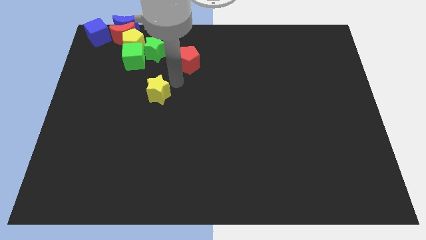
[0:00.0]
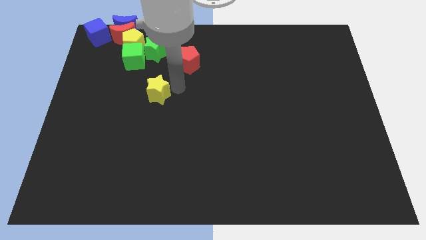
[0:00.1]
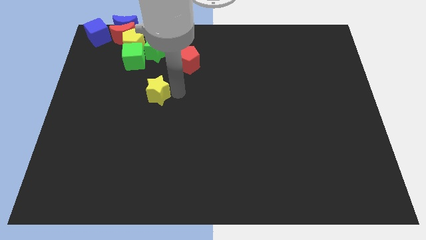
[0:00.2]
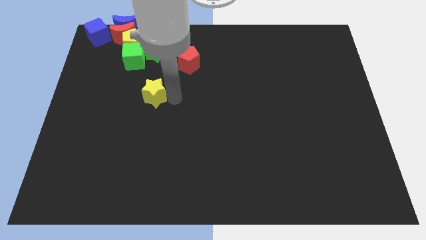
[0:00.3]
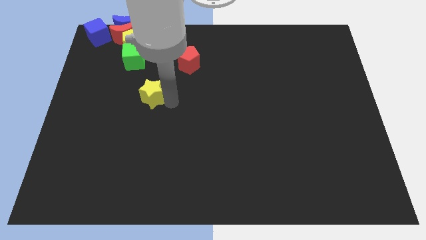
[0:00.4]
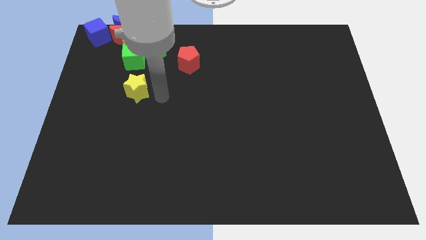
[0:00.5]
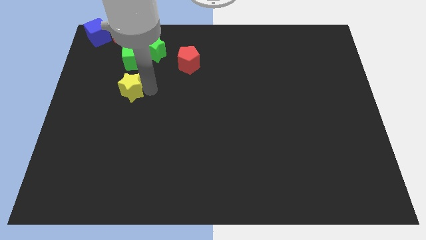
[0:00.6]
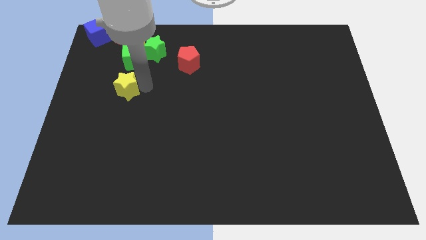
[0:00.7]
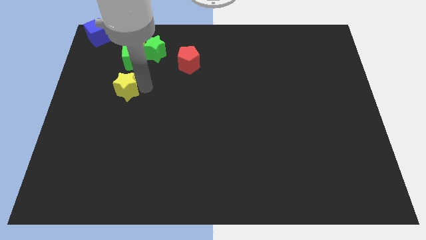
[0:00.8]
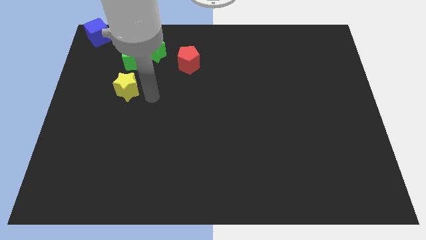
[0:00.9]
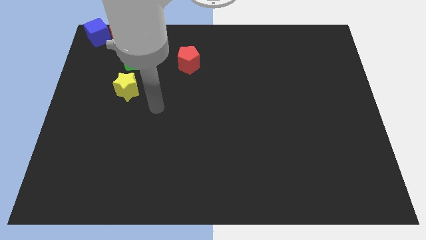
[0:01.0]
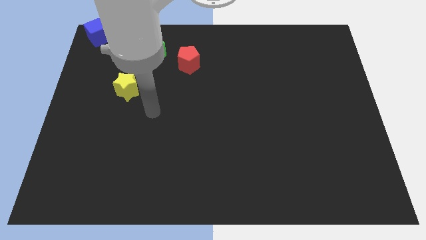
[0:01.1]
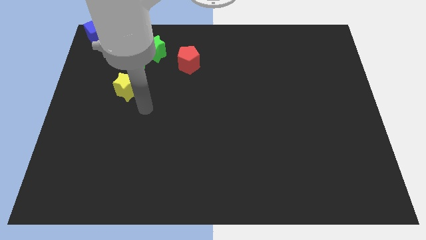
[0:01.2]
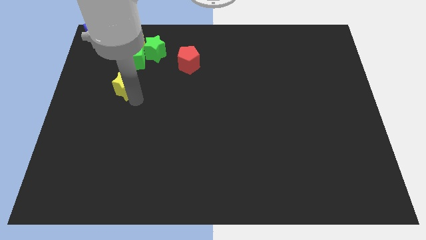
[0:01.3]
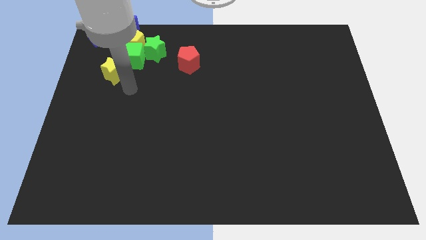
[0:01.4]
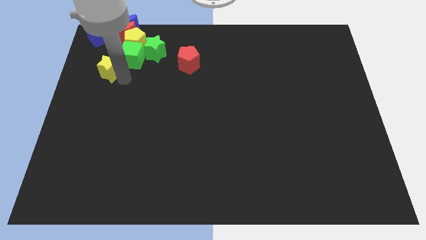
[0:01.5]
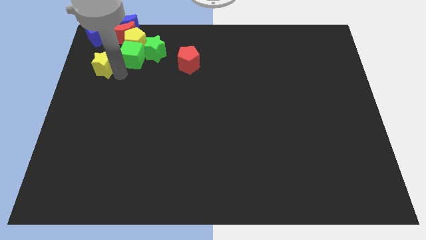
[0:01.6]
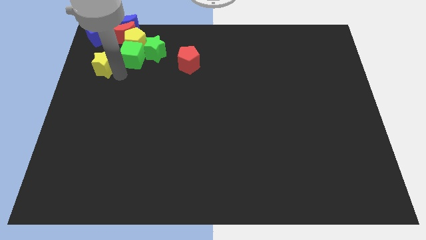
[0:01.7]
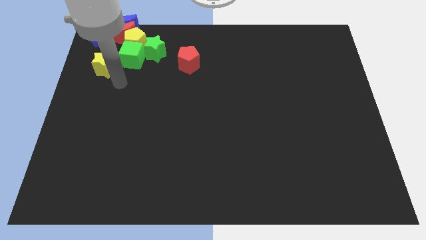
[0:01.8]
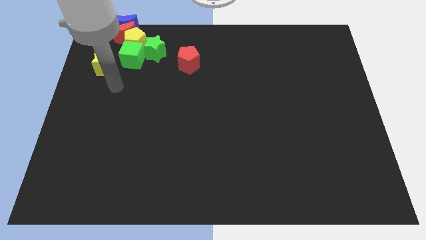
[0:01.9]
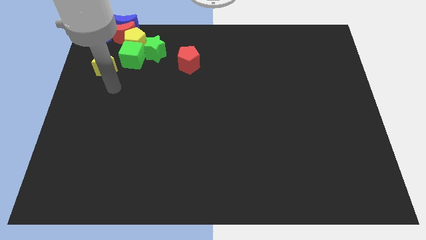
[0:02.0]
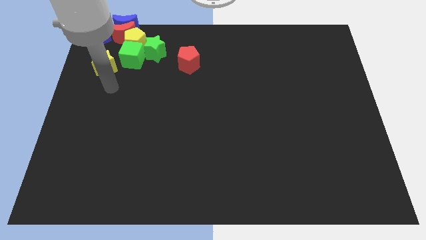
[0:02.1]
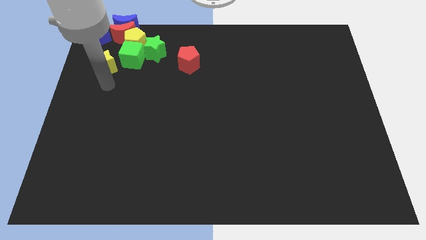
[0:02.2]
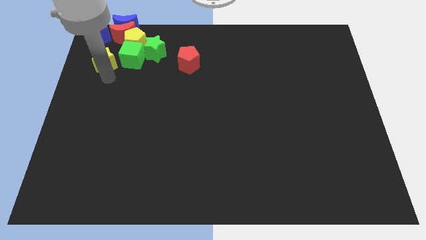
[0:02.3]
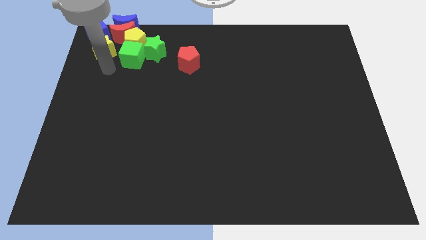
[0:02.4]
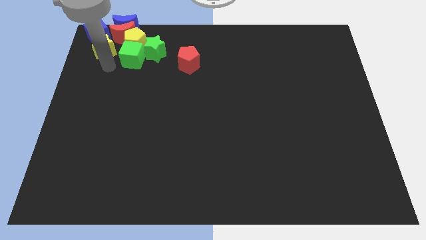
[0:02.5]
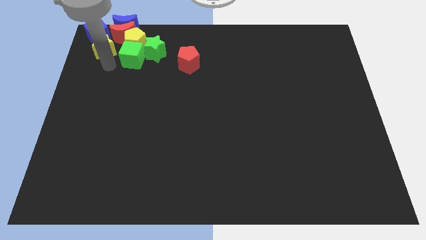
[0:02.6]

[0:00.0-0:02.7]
push the yellow star to the bottom of blue cube

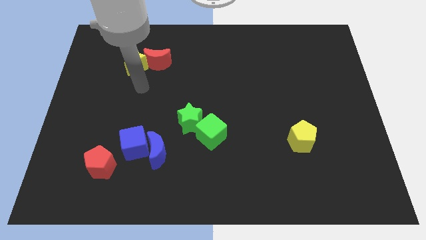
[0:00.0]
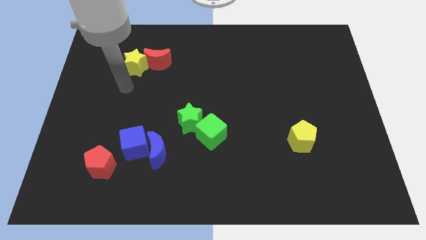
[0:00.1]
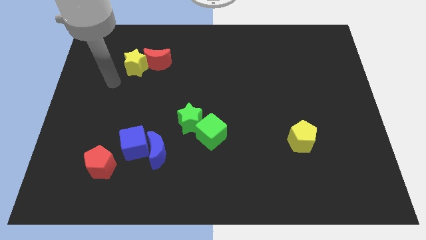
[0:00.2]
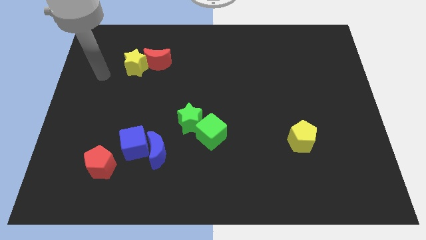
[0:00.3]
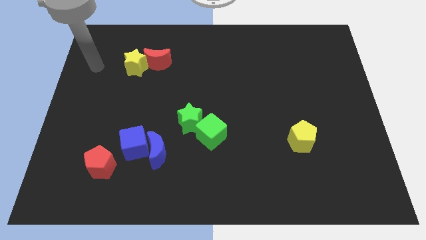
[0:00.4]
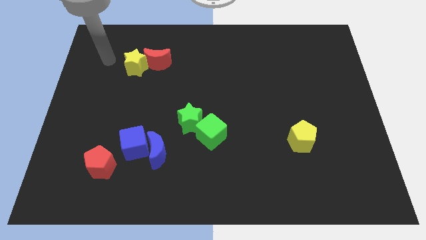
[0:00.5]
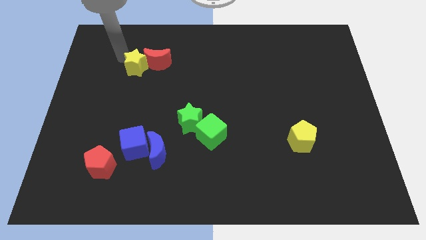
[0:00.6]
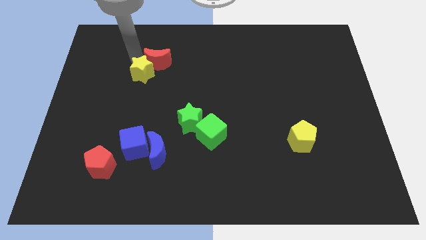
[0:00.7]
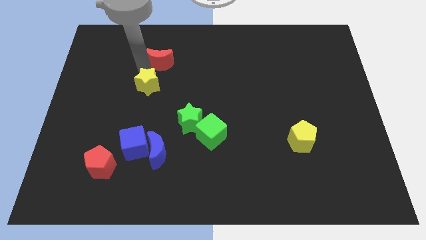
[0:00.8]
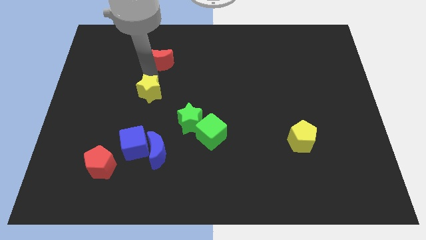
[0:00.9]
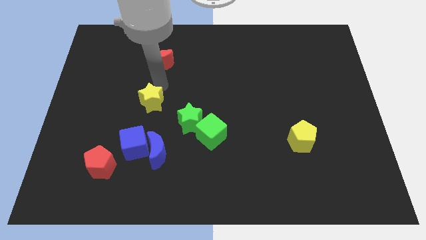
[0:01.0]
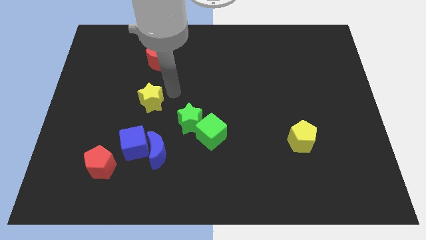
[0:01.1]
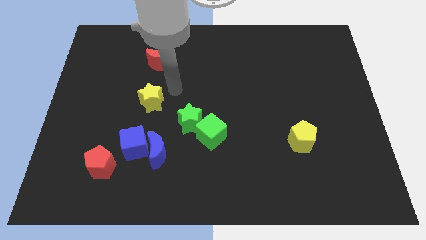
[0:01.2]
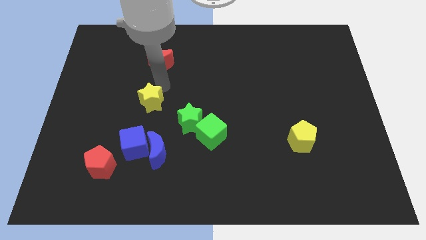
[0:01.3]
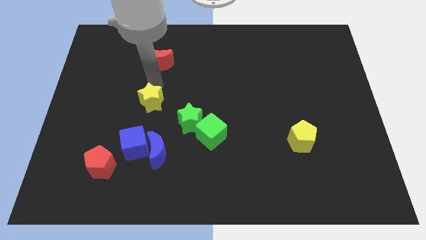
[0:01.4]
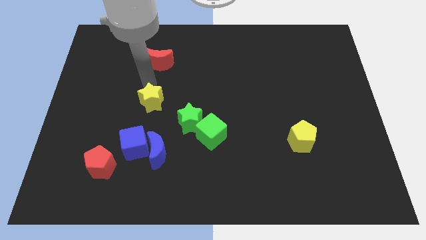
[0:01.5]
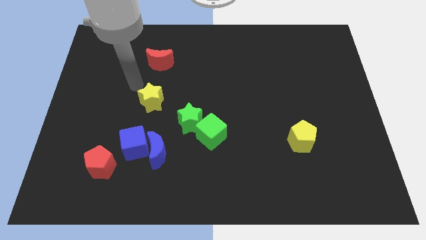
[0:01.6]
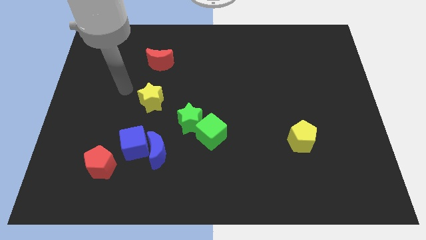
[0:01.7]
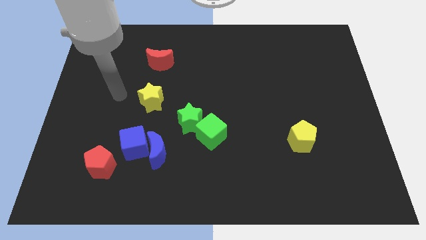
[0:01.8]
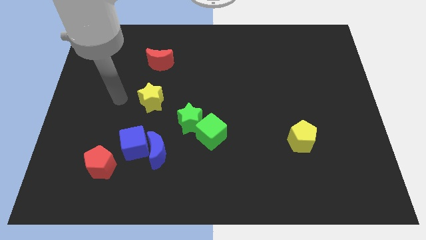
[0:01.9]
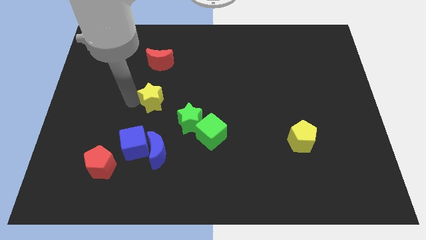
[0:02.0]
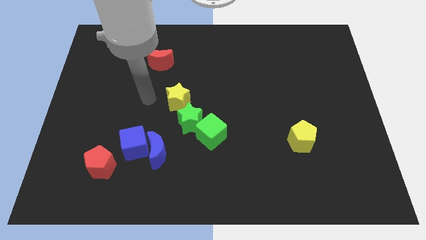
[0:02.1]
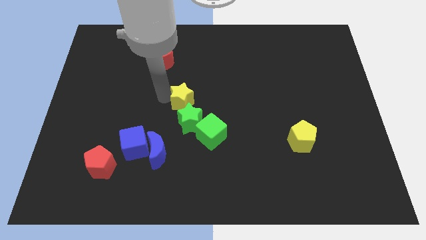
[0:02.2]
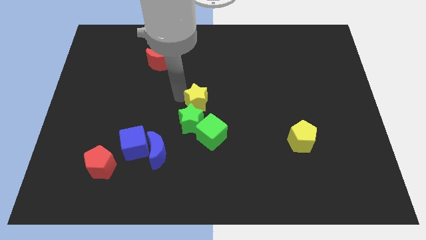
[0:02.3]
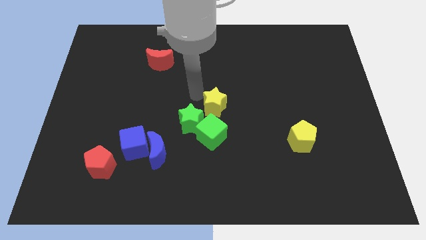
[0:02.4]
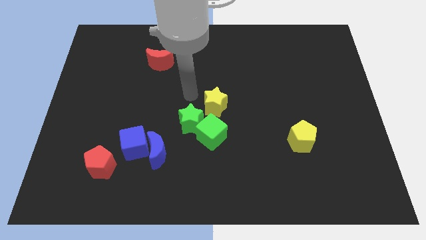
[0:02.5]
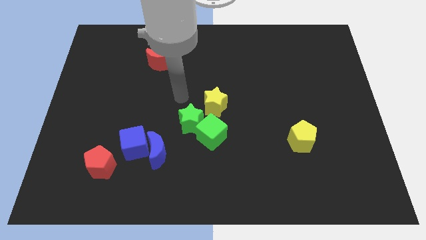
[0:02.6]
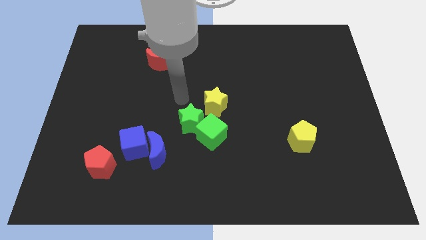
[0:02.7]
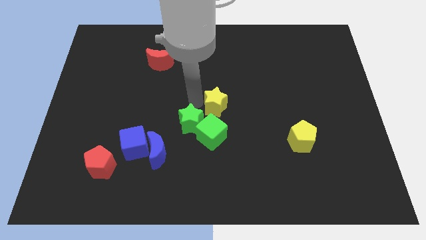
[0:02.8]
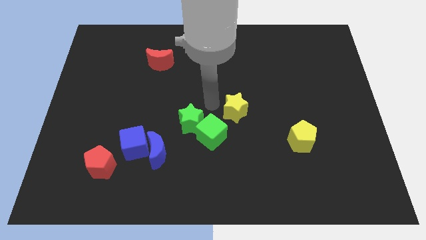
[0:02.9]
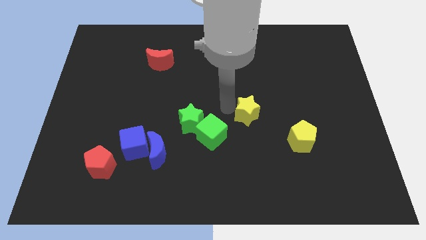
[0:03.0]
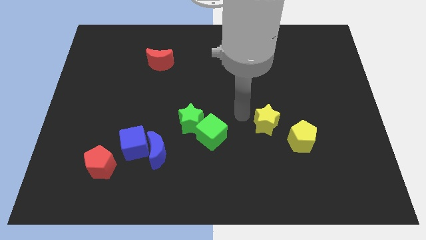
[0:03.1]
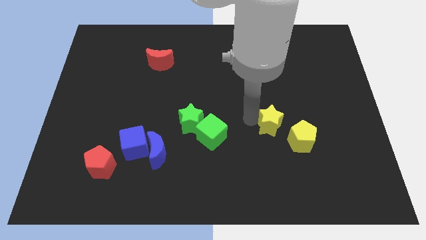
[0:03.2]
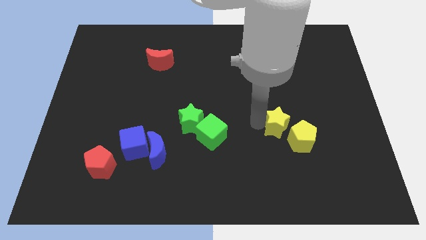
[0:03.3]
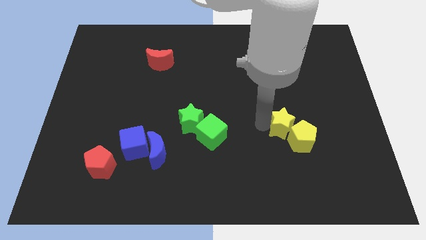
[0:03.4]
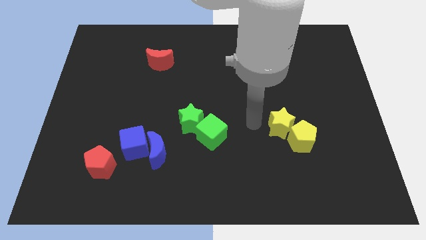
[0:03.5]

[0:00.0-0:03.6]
place yellow star near to yellow pentagon

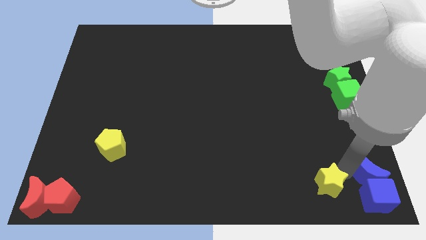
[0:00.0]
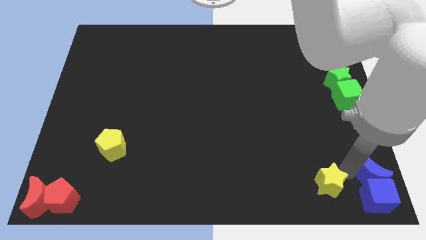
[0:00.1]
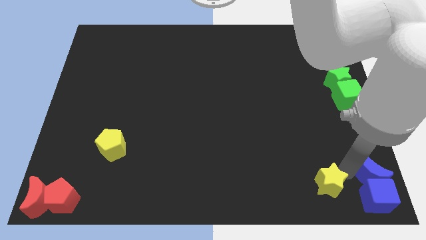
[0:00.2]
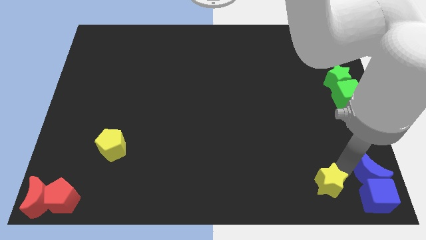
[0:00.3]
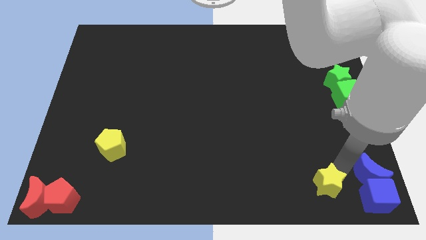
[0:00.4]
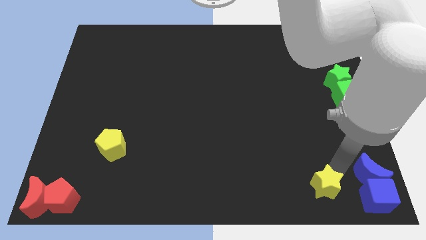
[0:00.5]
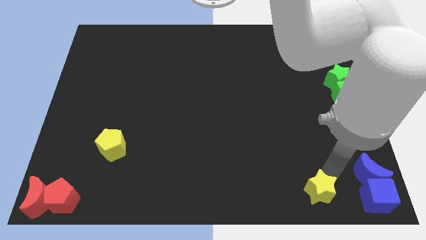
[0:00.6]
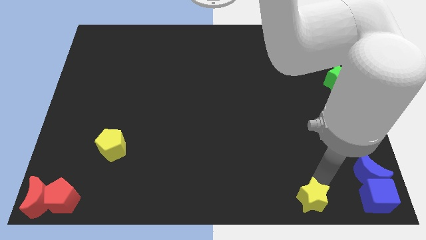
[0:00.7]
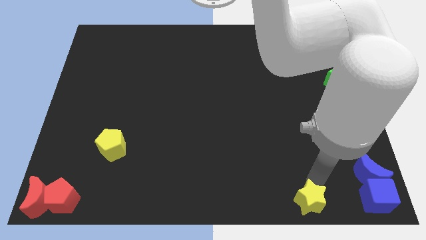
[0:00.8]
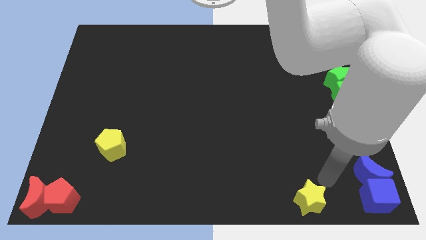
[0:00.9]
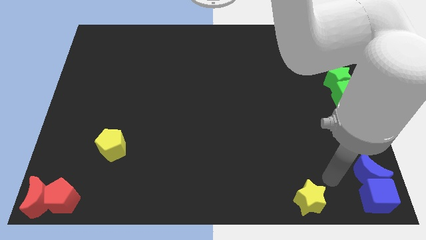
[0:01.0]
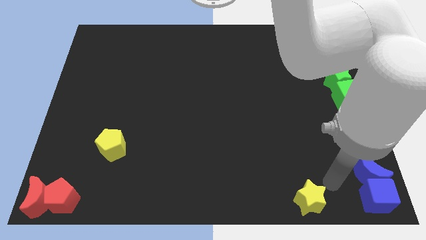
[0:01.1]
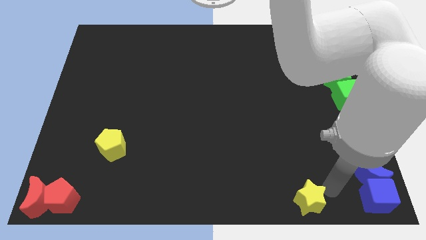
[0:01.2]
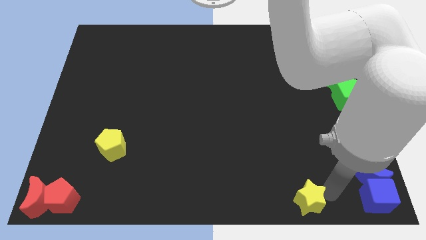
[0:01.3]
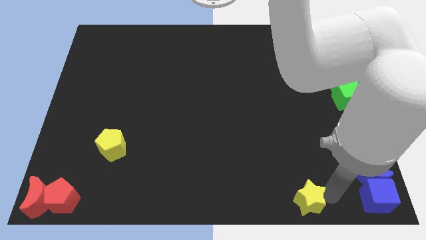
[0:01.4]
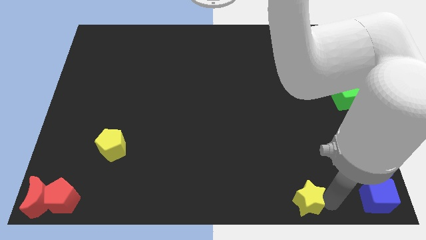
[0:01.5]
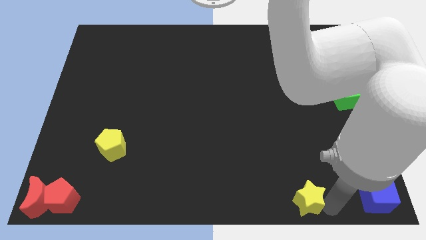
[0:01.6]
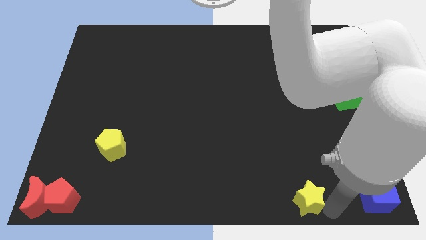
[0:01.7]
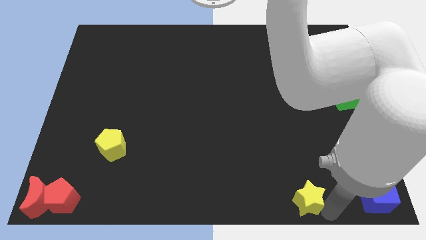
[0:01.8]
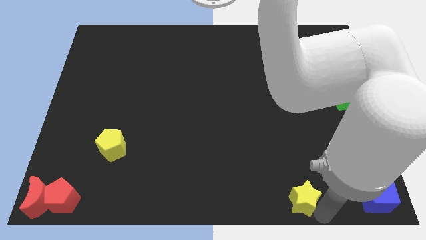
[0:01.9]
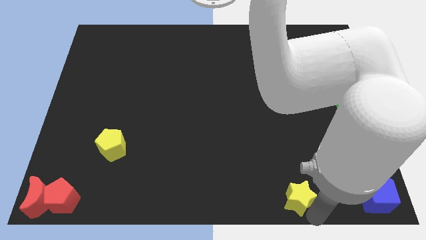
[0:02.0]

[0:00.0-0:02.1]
put the yellow star parallel left to the blue cube

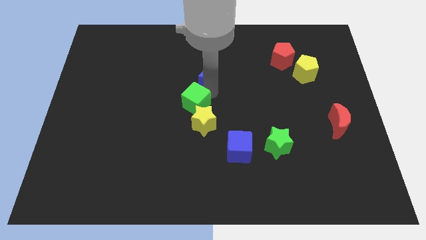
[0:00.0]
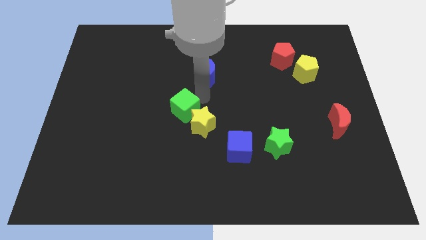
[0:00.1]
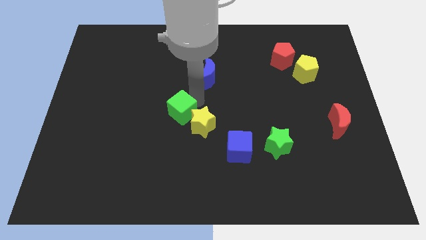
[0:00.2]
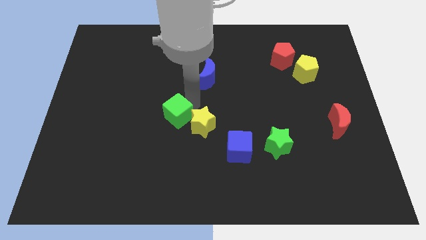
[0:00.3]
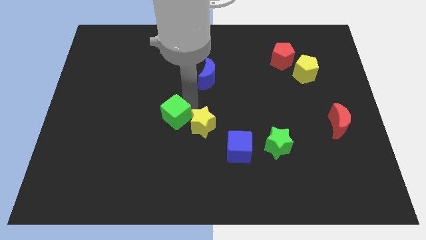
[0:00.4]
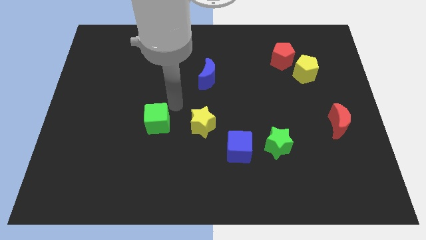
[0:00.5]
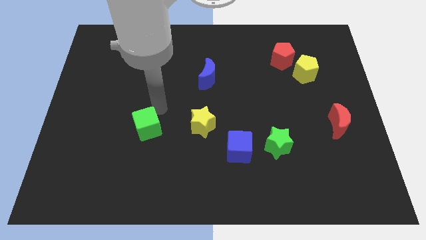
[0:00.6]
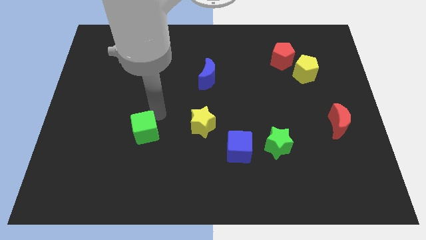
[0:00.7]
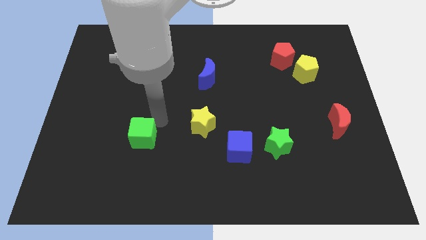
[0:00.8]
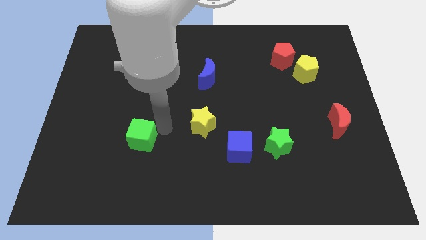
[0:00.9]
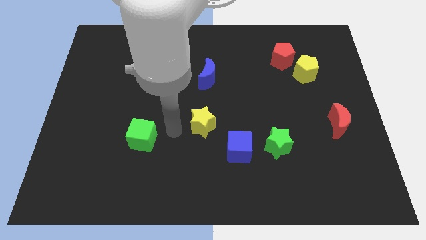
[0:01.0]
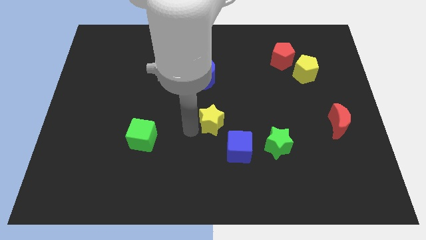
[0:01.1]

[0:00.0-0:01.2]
separate the green cube from the yellow star
